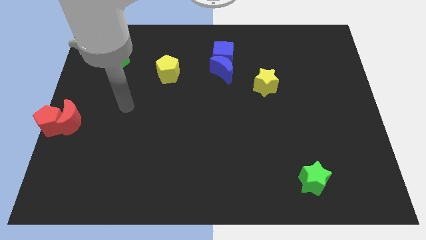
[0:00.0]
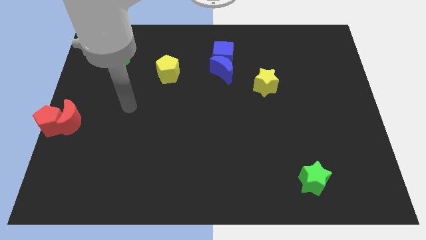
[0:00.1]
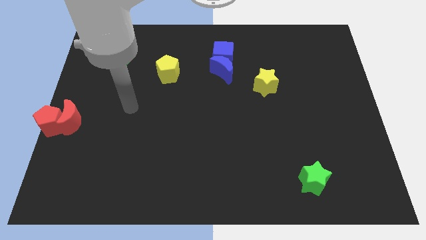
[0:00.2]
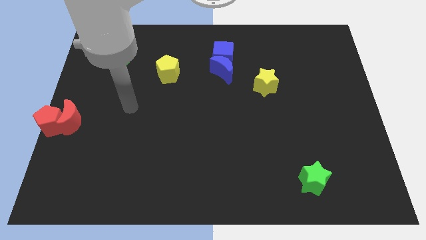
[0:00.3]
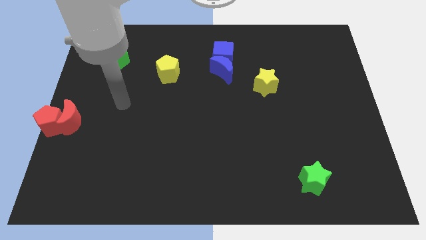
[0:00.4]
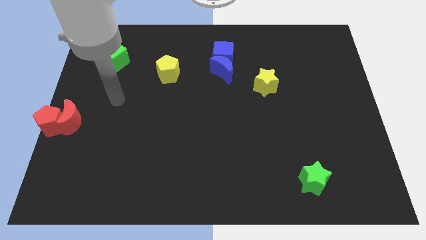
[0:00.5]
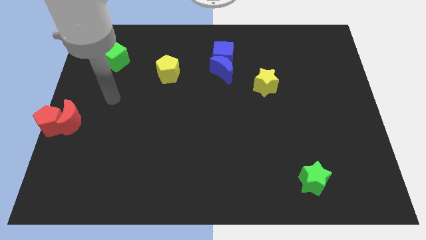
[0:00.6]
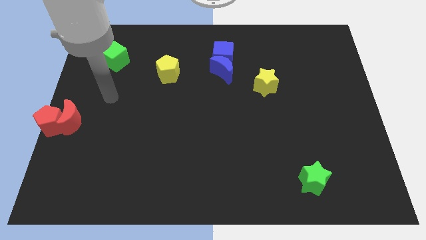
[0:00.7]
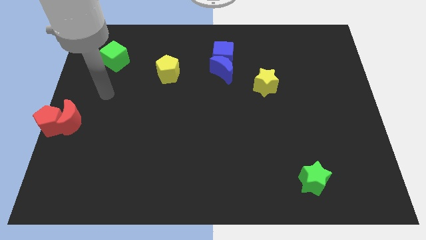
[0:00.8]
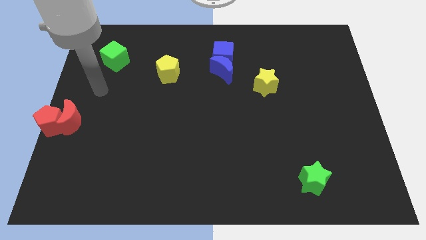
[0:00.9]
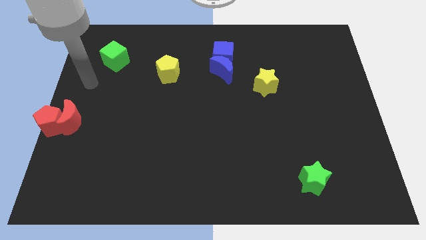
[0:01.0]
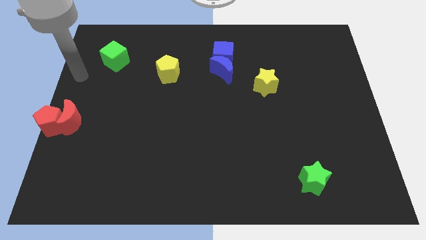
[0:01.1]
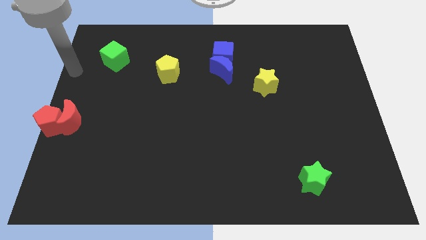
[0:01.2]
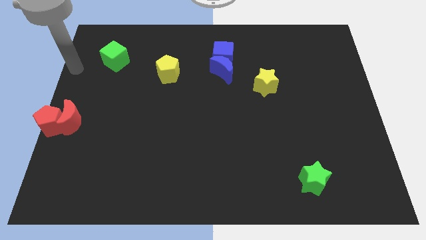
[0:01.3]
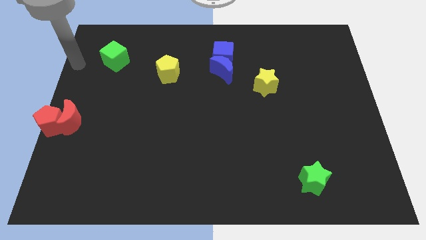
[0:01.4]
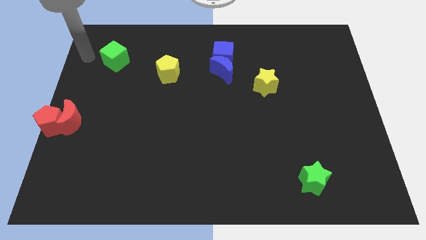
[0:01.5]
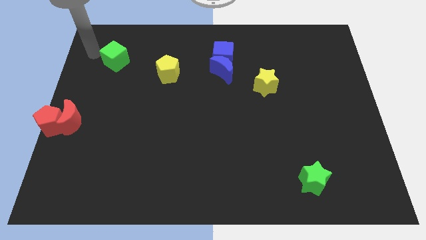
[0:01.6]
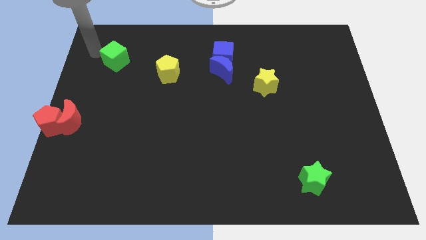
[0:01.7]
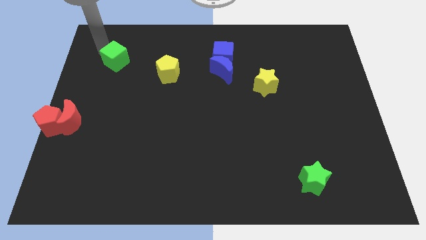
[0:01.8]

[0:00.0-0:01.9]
place your arm above the green star

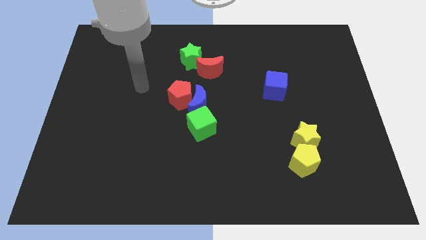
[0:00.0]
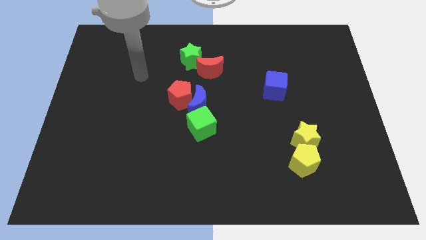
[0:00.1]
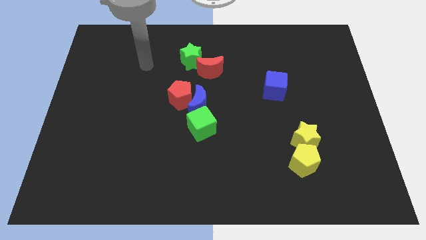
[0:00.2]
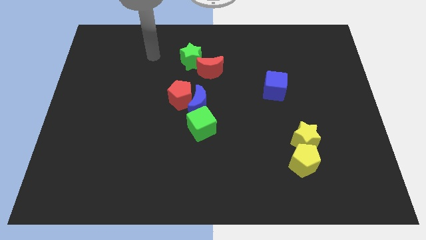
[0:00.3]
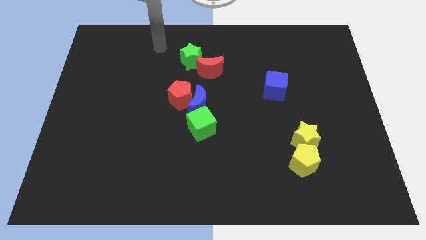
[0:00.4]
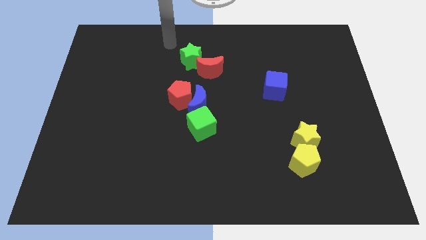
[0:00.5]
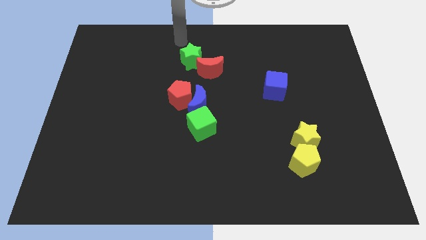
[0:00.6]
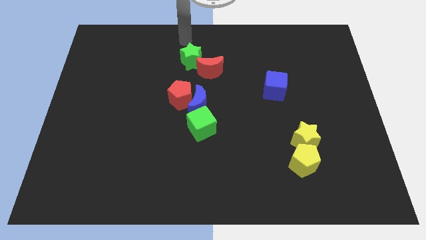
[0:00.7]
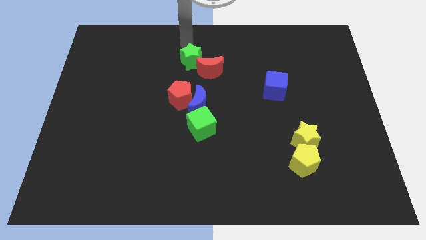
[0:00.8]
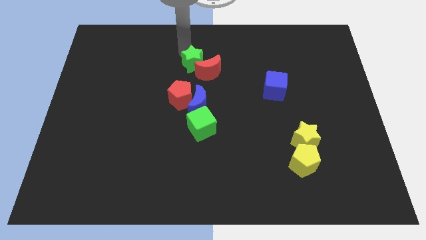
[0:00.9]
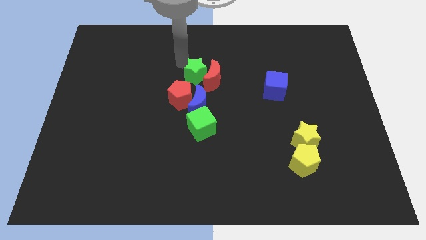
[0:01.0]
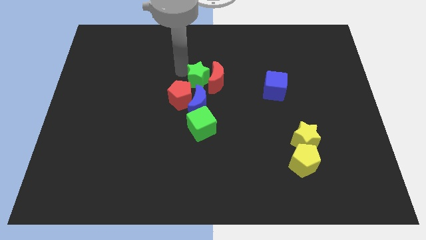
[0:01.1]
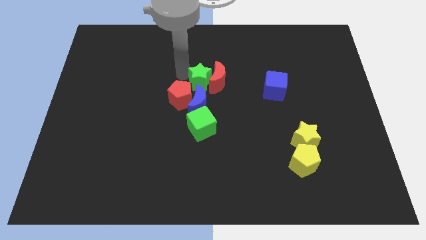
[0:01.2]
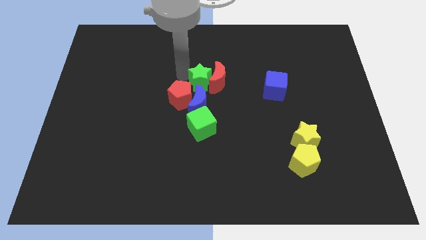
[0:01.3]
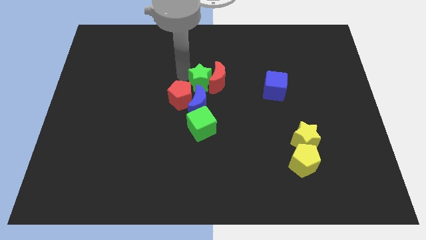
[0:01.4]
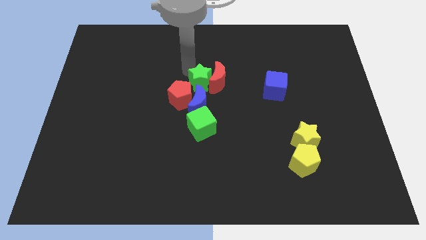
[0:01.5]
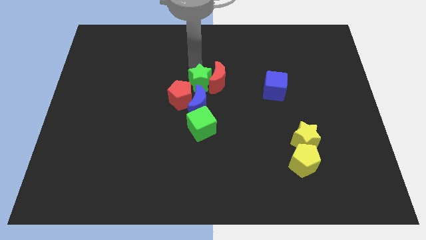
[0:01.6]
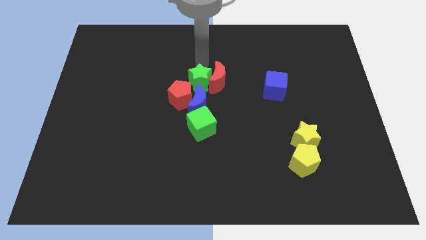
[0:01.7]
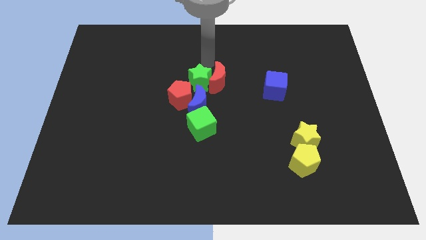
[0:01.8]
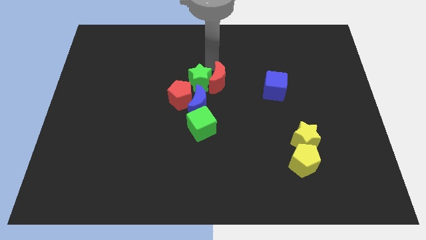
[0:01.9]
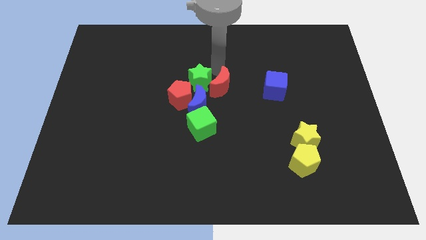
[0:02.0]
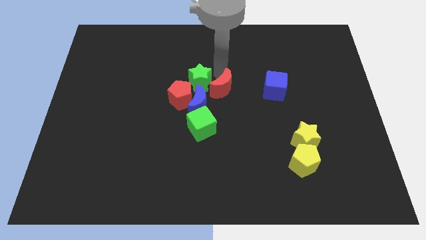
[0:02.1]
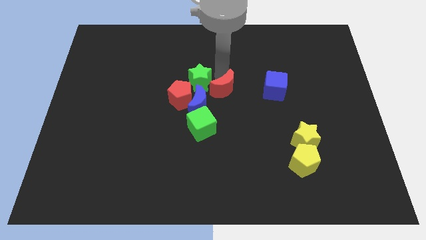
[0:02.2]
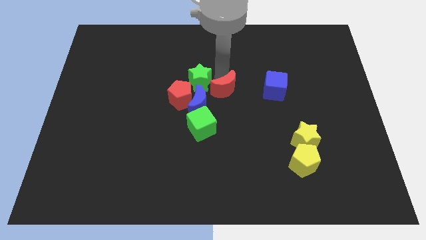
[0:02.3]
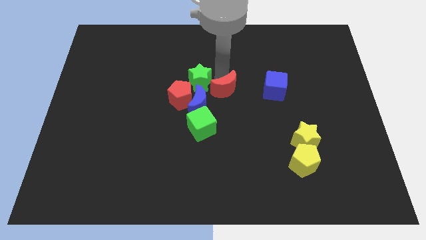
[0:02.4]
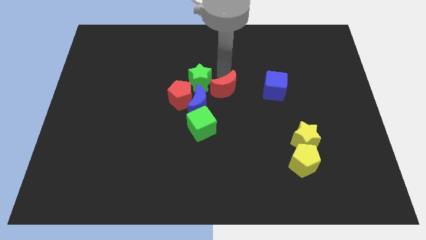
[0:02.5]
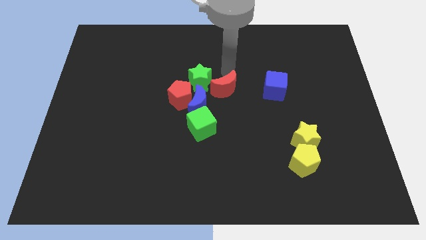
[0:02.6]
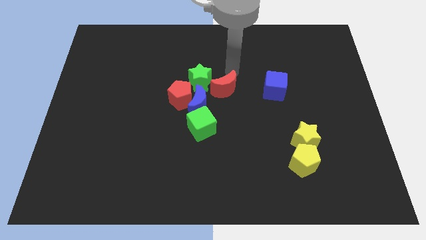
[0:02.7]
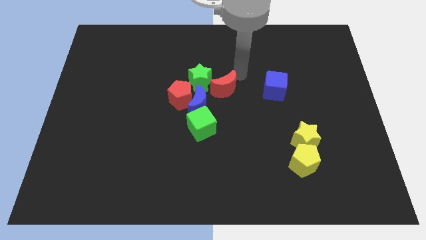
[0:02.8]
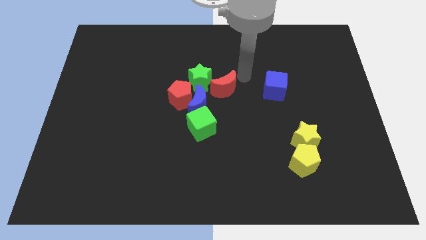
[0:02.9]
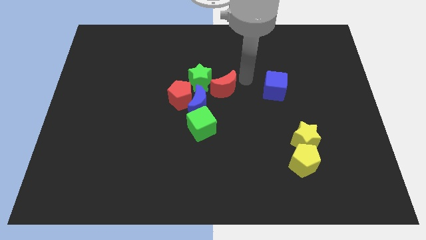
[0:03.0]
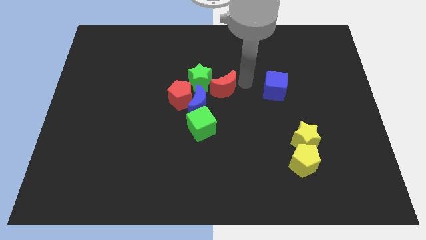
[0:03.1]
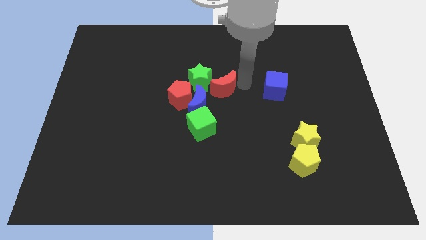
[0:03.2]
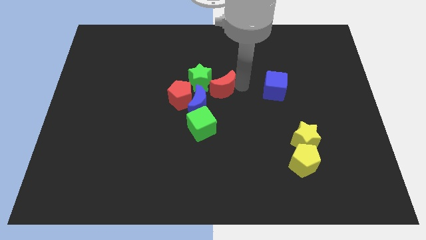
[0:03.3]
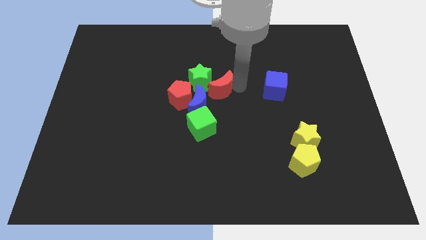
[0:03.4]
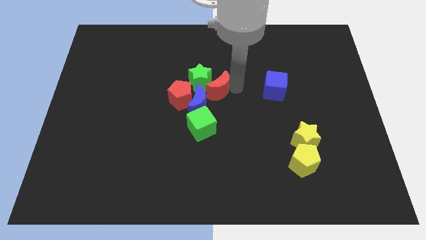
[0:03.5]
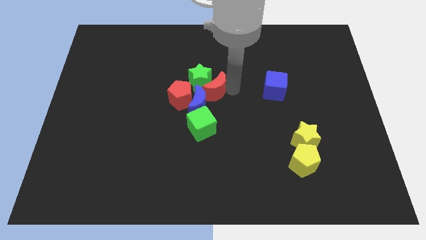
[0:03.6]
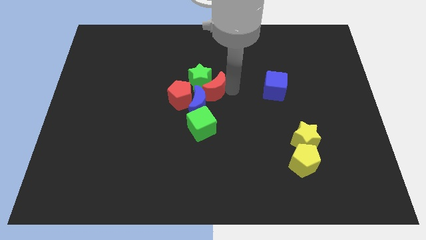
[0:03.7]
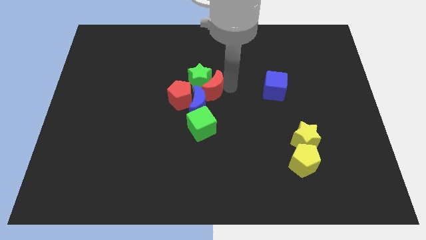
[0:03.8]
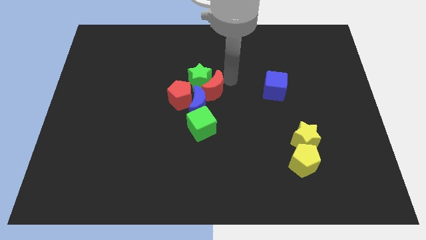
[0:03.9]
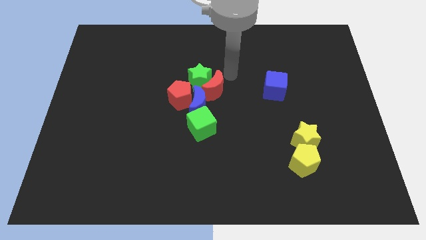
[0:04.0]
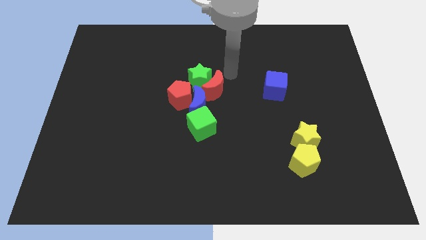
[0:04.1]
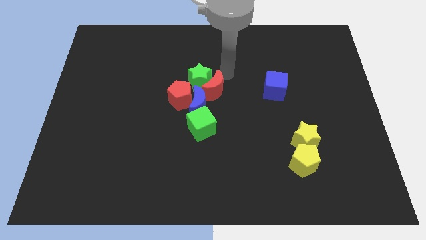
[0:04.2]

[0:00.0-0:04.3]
push the green star and the red crescent towards the group of blocks

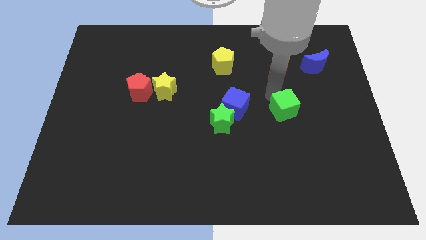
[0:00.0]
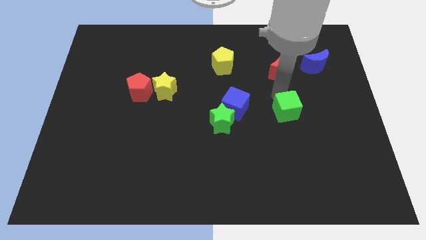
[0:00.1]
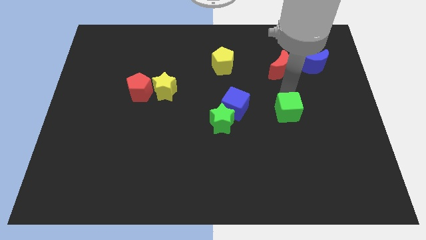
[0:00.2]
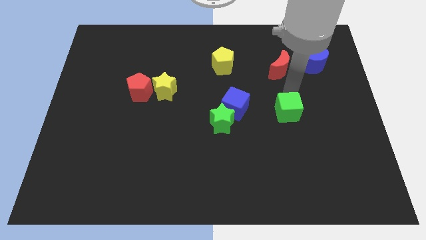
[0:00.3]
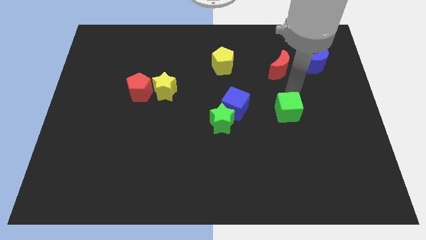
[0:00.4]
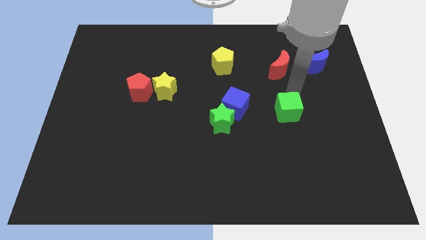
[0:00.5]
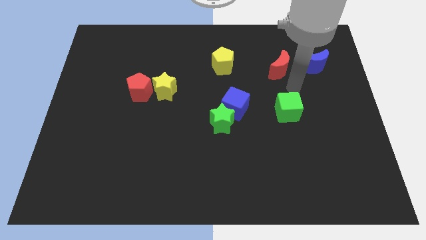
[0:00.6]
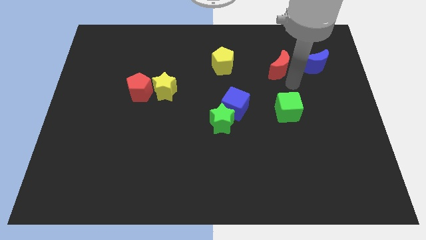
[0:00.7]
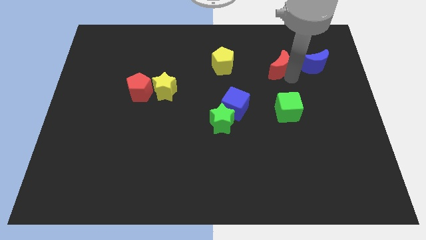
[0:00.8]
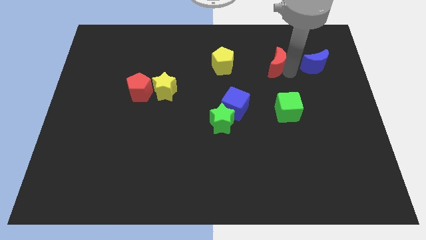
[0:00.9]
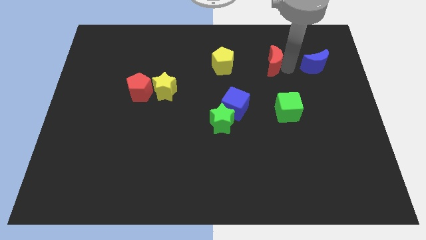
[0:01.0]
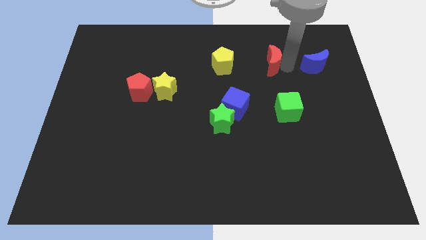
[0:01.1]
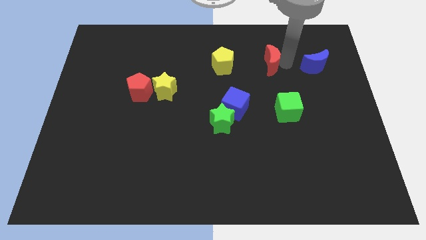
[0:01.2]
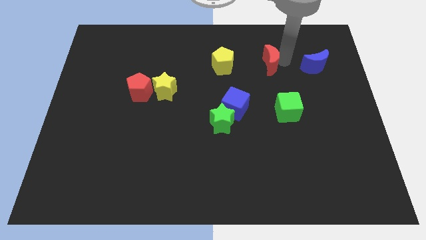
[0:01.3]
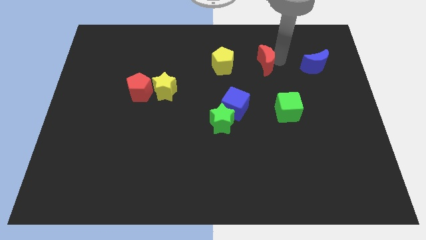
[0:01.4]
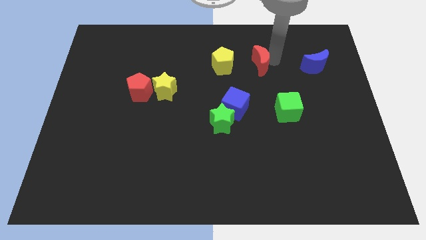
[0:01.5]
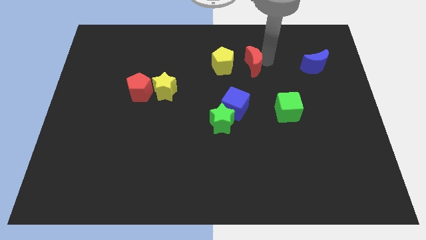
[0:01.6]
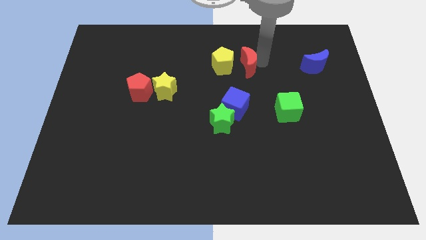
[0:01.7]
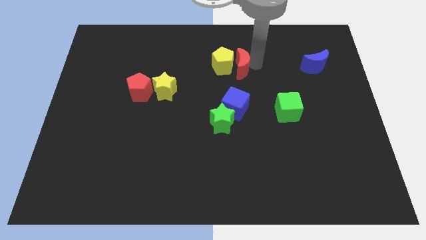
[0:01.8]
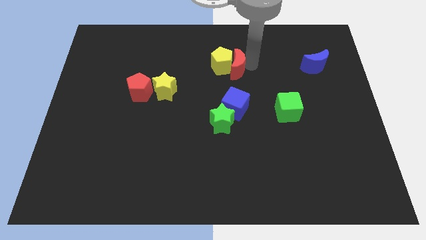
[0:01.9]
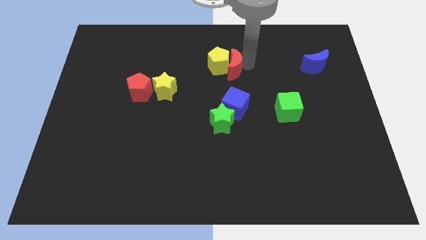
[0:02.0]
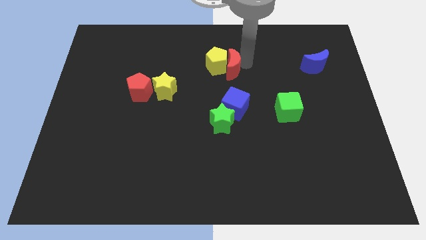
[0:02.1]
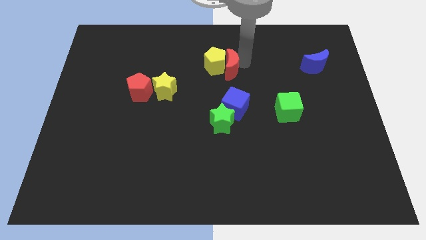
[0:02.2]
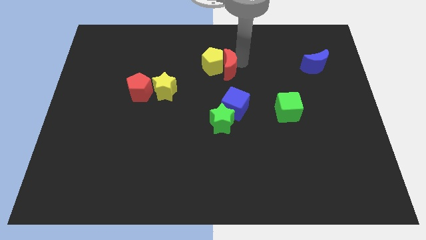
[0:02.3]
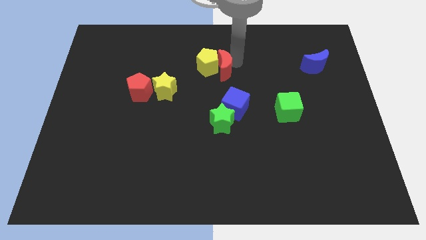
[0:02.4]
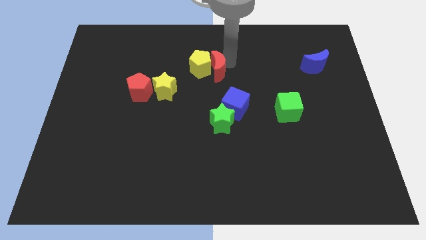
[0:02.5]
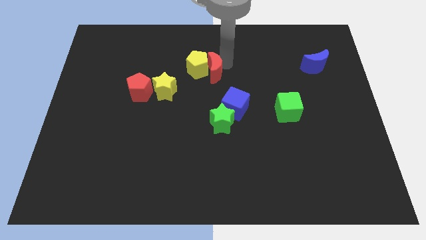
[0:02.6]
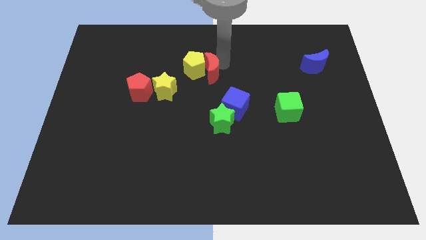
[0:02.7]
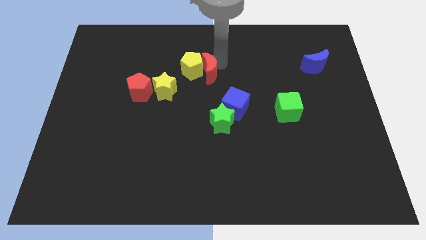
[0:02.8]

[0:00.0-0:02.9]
push red crescent into yellow pentagon
